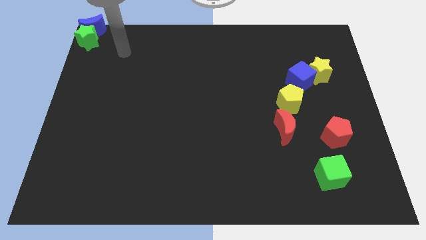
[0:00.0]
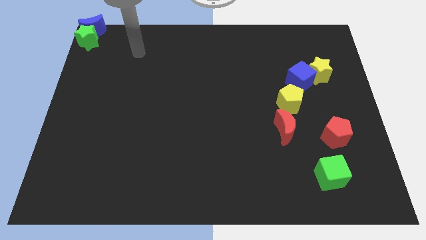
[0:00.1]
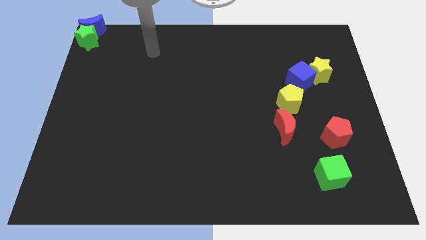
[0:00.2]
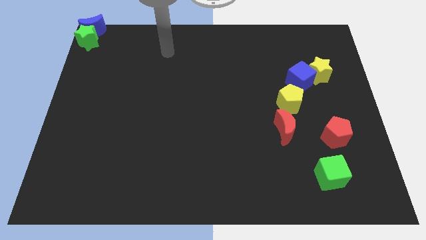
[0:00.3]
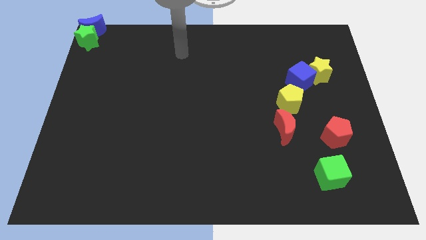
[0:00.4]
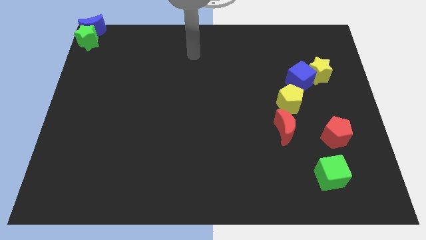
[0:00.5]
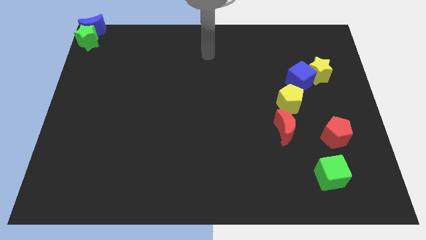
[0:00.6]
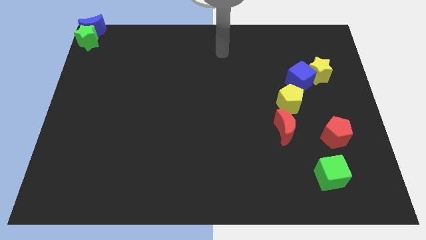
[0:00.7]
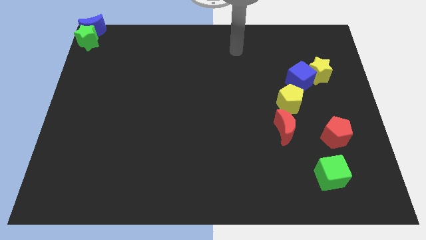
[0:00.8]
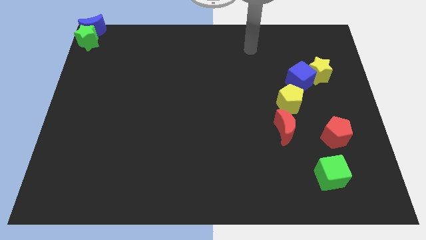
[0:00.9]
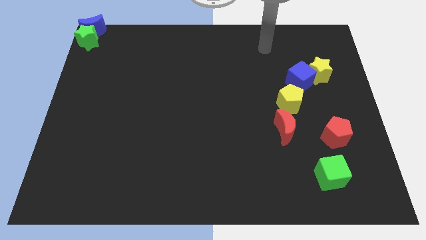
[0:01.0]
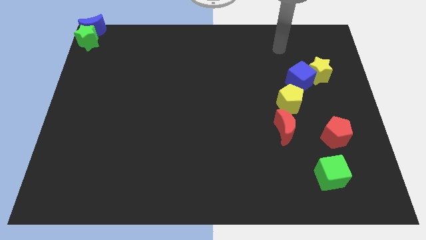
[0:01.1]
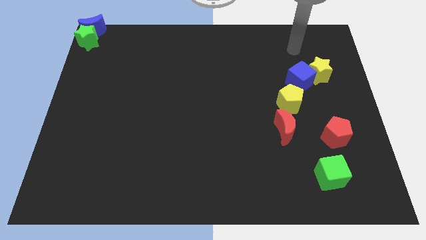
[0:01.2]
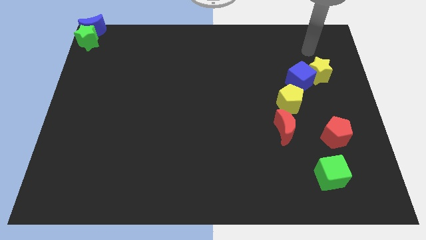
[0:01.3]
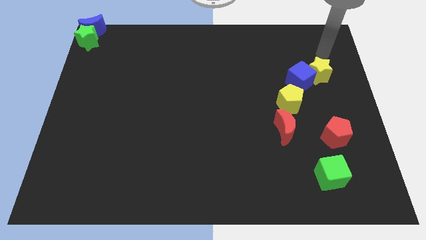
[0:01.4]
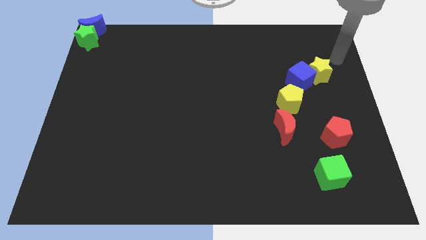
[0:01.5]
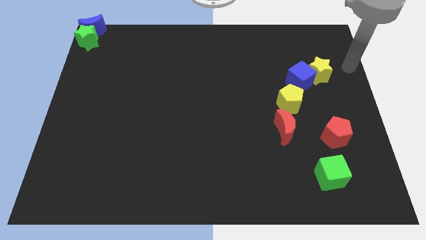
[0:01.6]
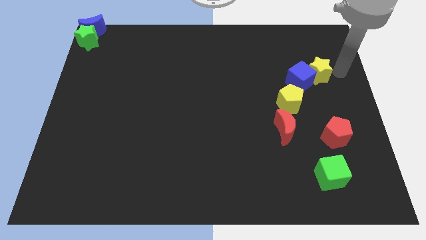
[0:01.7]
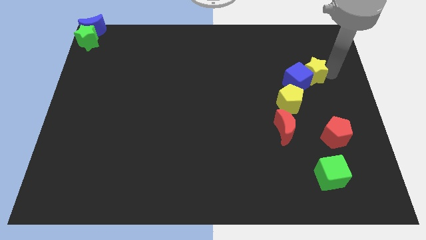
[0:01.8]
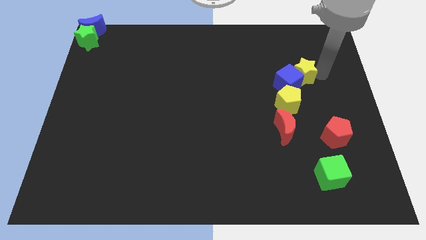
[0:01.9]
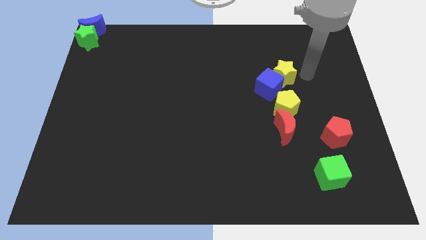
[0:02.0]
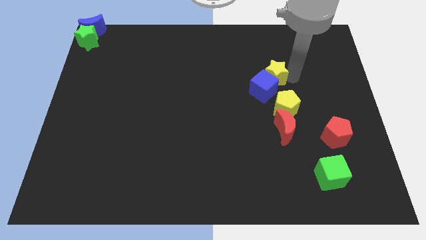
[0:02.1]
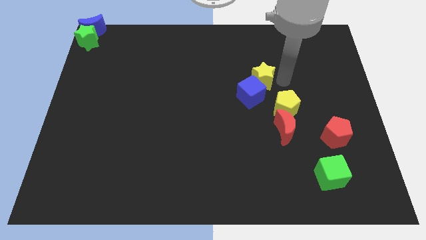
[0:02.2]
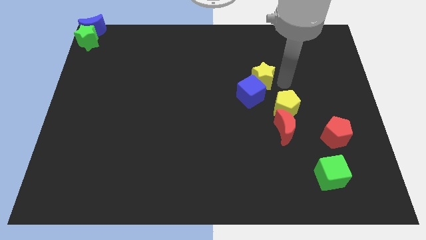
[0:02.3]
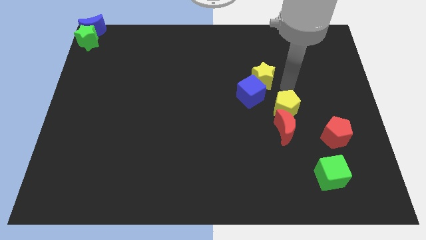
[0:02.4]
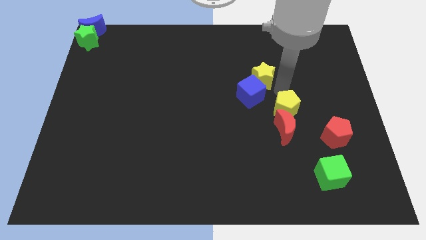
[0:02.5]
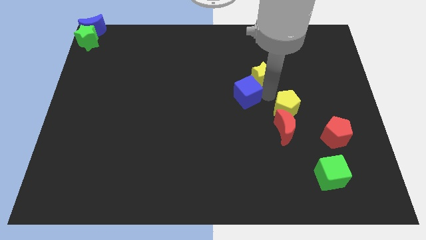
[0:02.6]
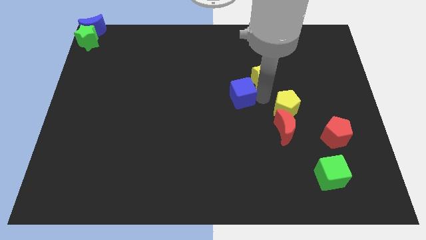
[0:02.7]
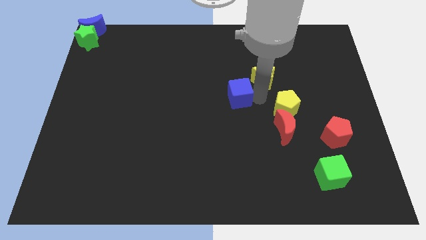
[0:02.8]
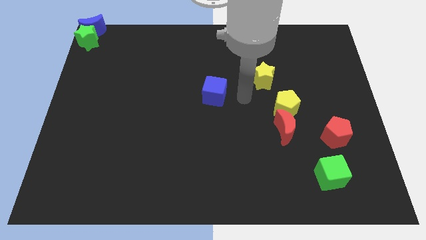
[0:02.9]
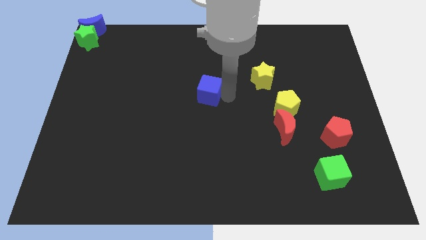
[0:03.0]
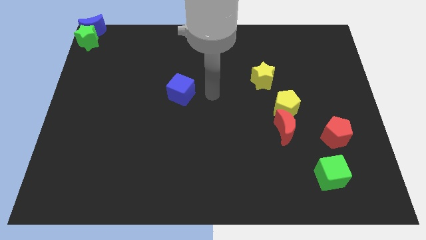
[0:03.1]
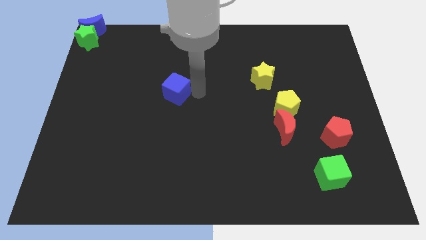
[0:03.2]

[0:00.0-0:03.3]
separate the yellow star and blue cube from the blocks

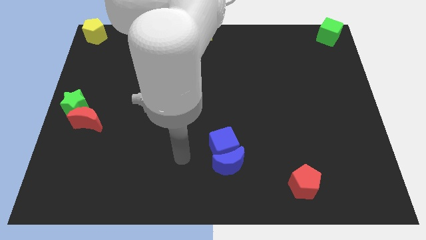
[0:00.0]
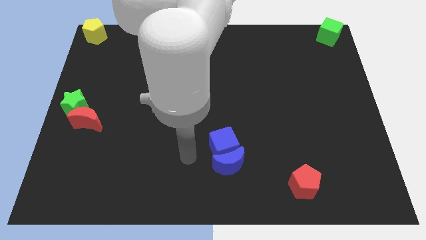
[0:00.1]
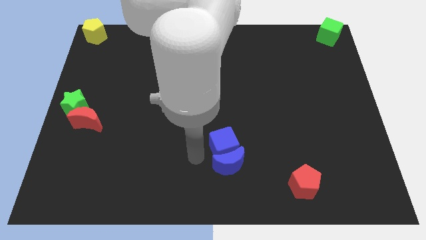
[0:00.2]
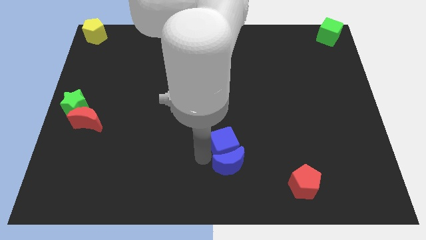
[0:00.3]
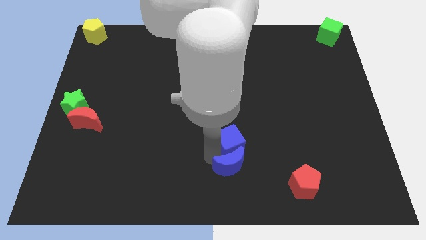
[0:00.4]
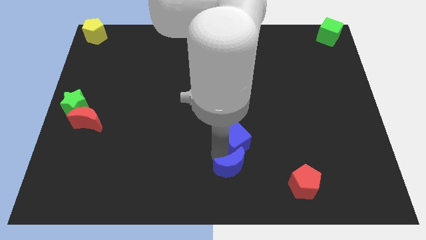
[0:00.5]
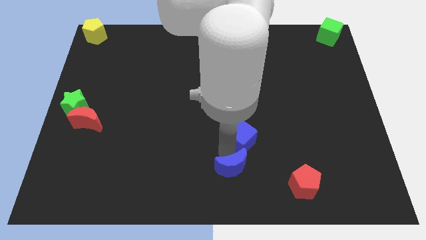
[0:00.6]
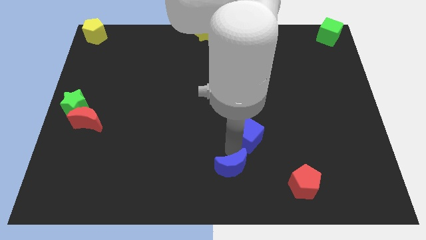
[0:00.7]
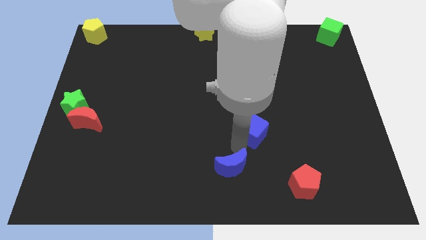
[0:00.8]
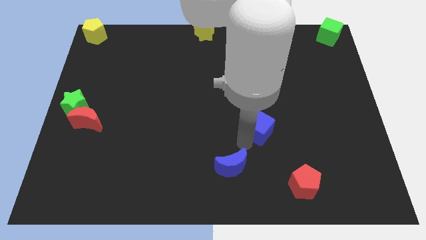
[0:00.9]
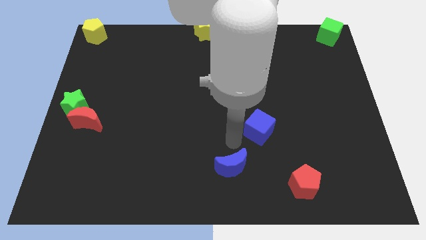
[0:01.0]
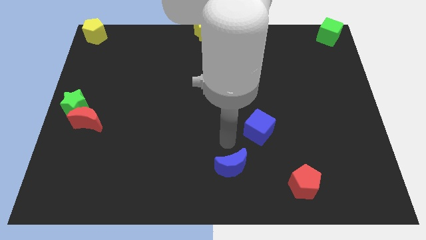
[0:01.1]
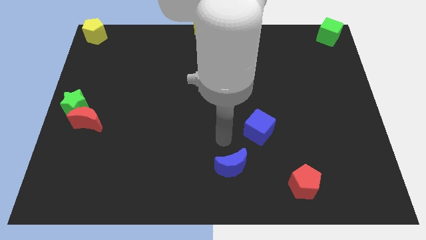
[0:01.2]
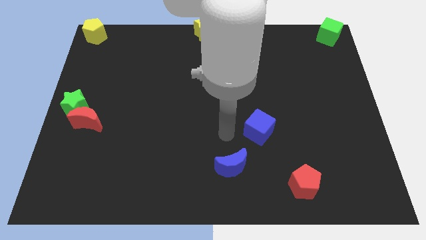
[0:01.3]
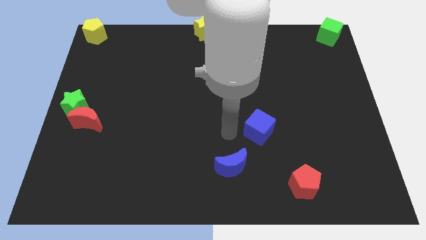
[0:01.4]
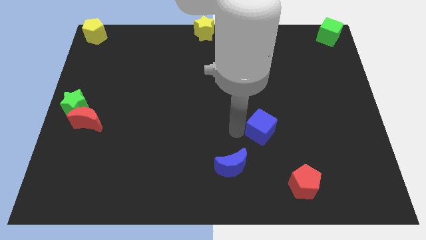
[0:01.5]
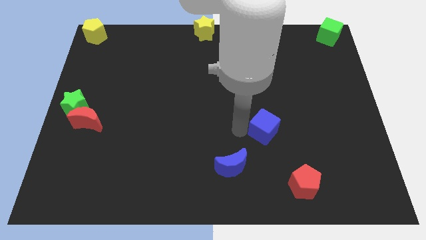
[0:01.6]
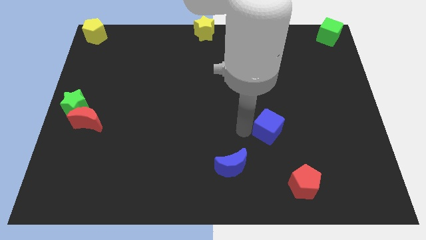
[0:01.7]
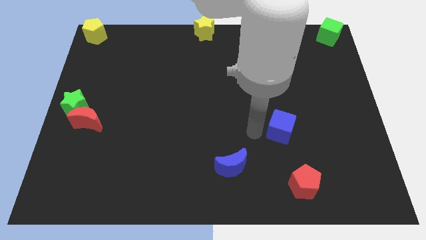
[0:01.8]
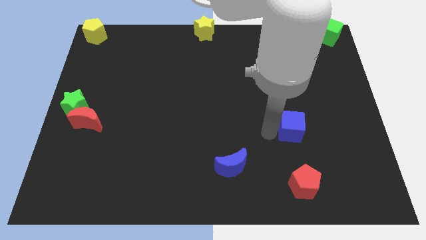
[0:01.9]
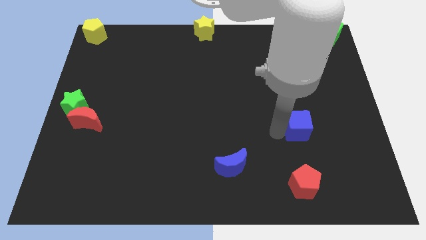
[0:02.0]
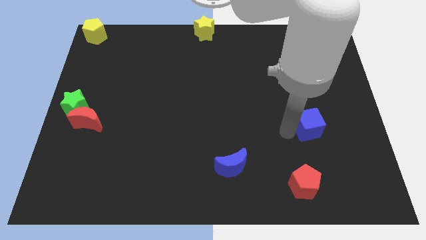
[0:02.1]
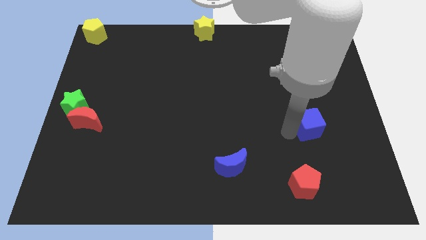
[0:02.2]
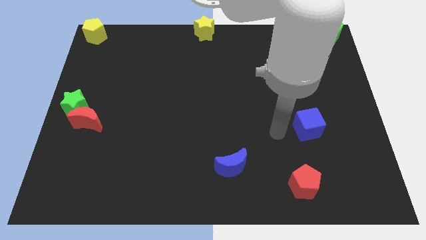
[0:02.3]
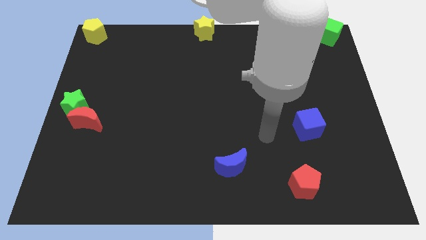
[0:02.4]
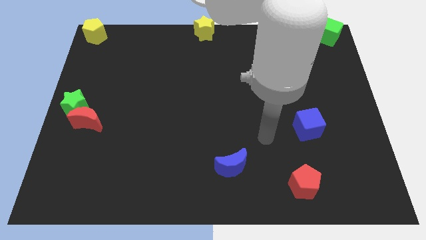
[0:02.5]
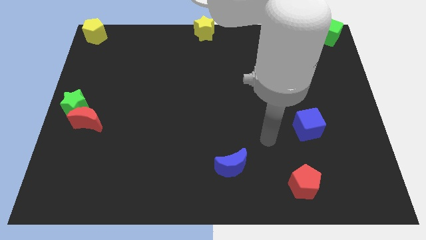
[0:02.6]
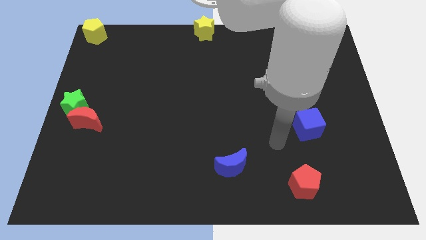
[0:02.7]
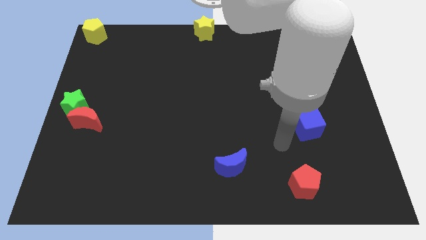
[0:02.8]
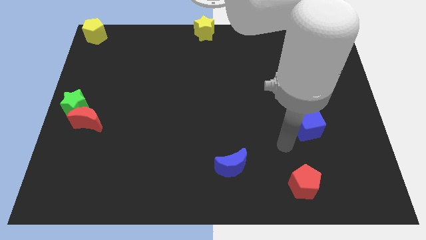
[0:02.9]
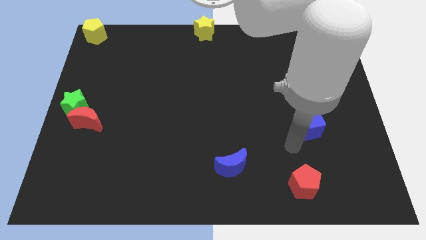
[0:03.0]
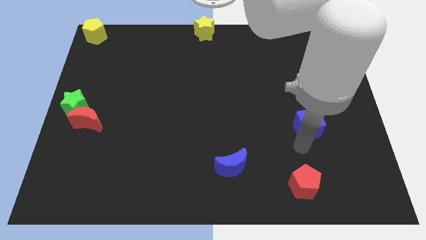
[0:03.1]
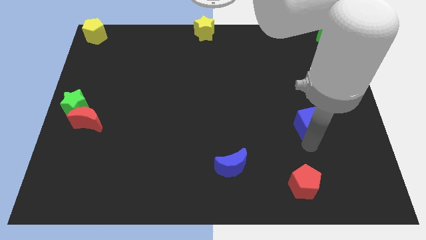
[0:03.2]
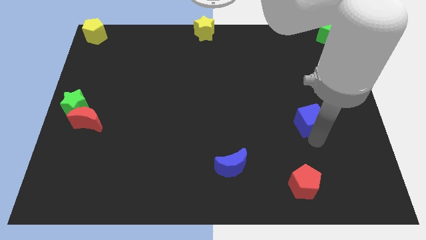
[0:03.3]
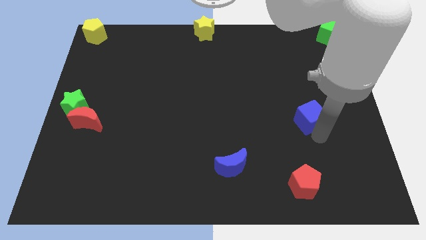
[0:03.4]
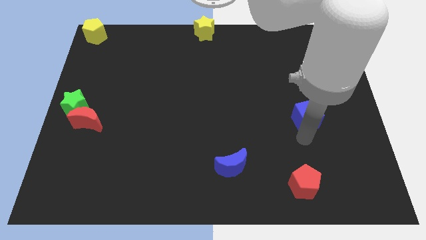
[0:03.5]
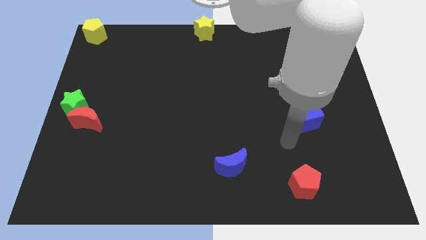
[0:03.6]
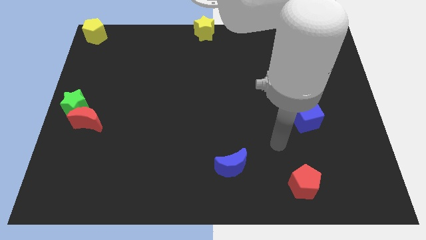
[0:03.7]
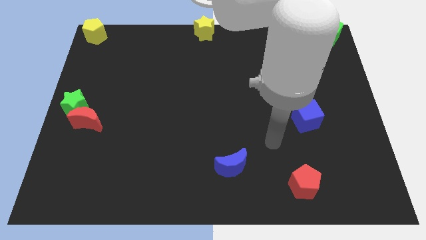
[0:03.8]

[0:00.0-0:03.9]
push the blue cube slightly towards the right side of the board

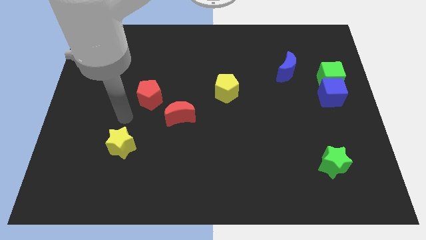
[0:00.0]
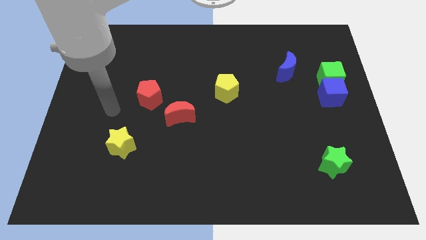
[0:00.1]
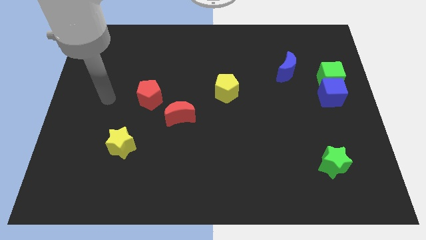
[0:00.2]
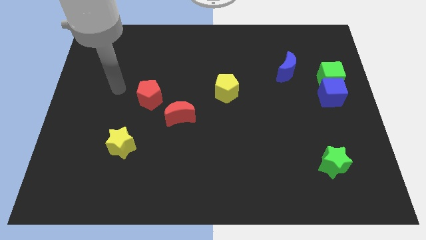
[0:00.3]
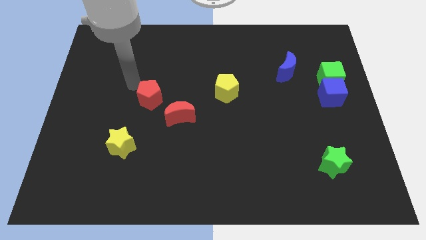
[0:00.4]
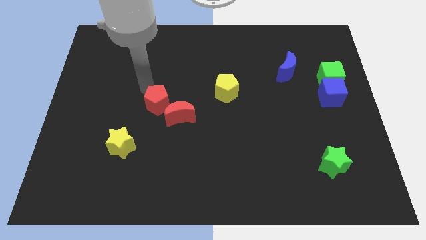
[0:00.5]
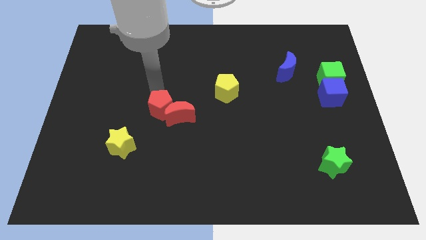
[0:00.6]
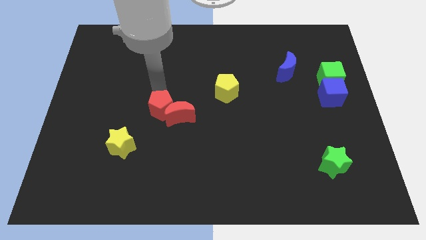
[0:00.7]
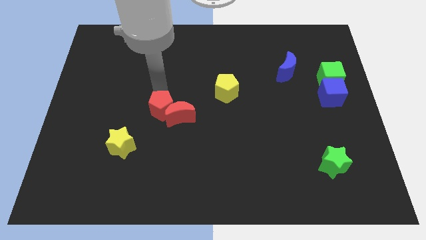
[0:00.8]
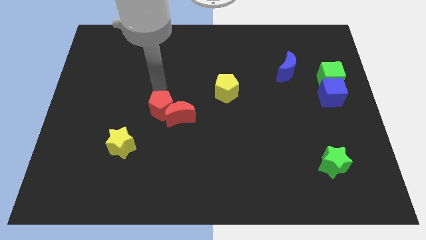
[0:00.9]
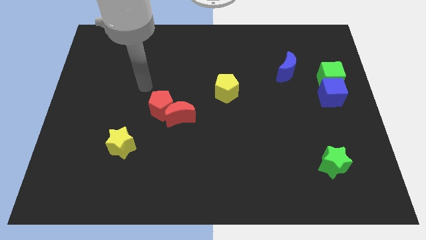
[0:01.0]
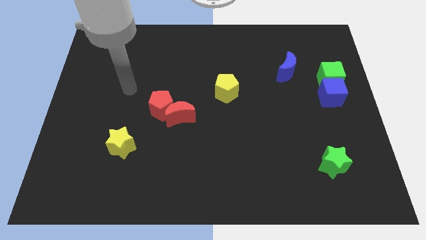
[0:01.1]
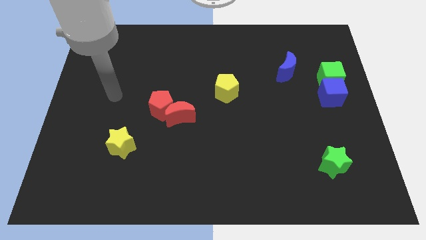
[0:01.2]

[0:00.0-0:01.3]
push the red pentagon into the red moon

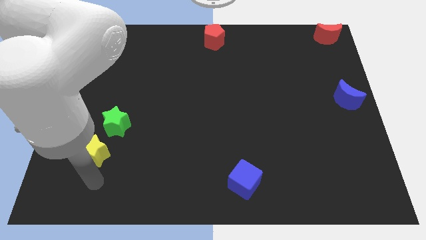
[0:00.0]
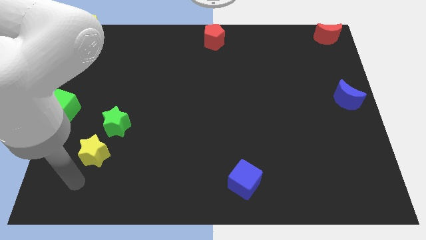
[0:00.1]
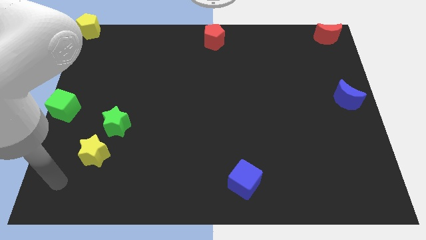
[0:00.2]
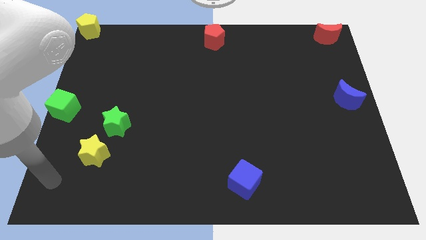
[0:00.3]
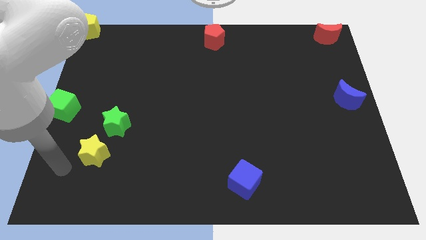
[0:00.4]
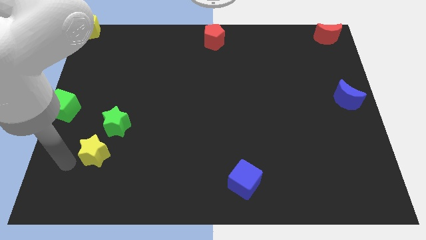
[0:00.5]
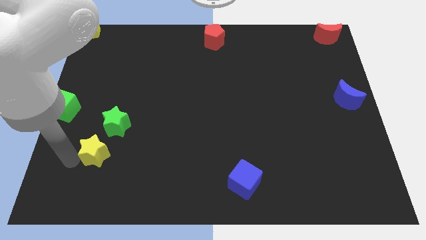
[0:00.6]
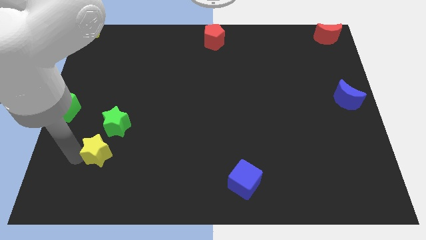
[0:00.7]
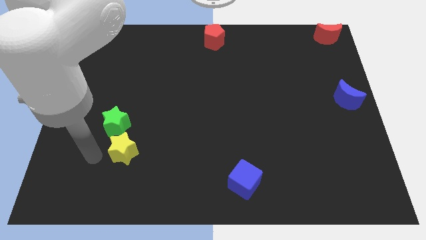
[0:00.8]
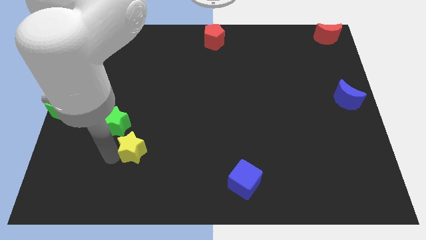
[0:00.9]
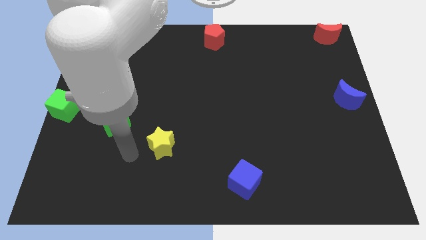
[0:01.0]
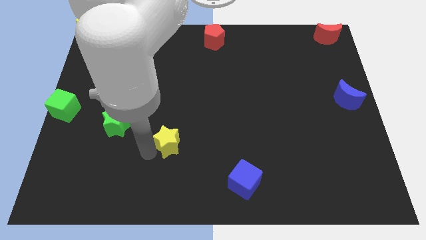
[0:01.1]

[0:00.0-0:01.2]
place the yellow star in between the green star and the blue cube
